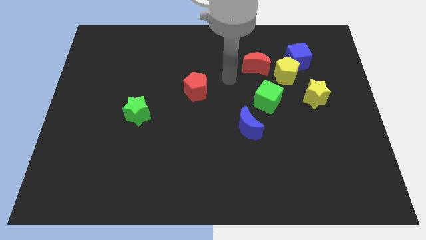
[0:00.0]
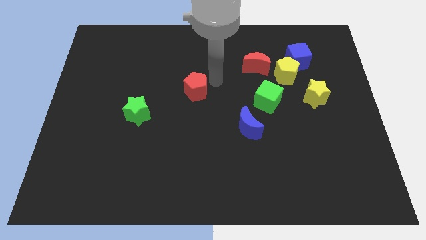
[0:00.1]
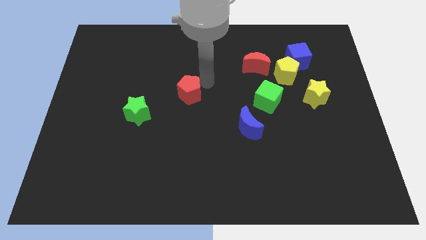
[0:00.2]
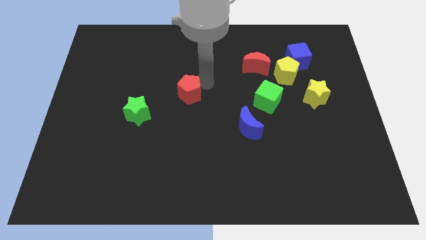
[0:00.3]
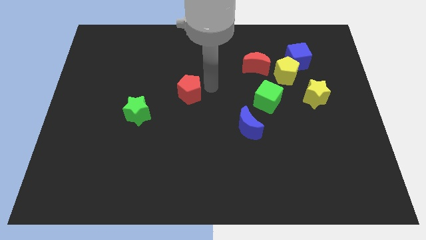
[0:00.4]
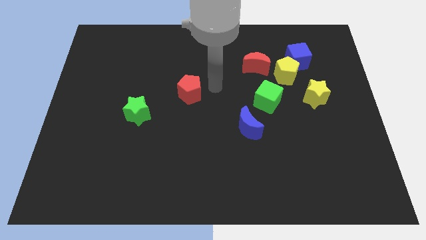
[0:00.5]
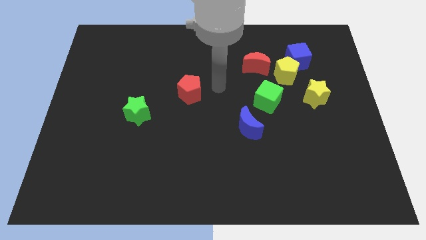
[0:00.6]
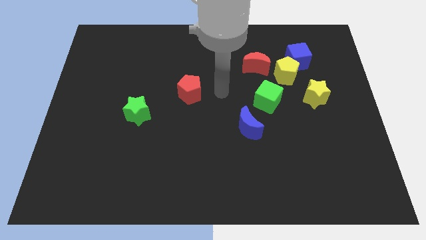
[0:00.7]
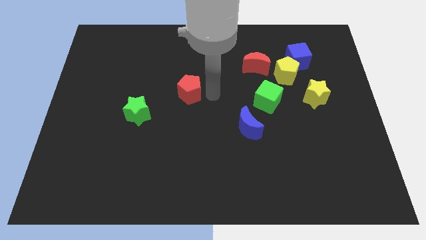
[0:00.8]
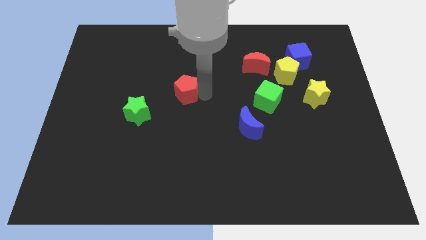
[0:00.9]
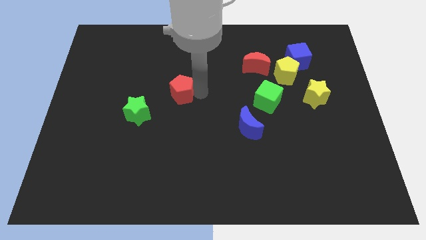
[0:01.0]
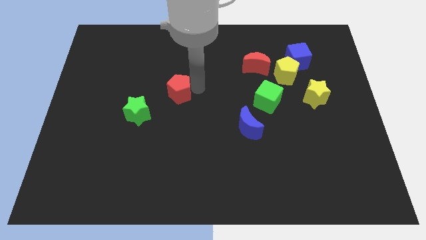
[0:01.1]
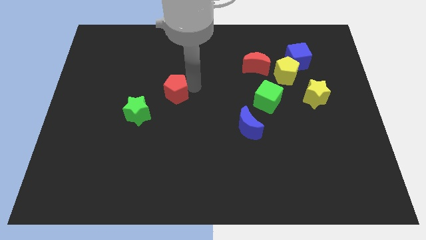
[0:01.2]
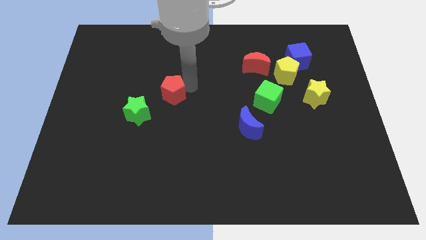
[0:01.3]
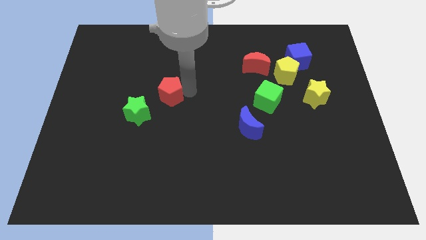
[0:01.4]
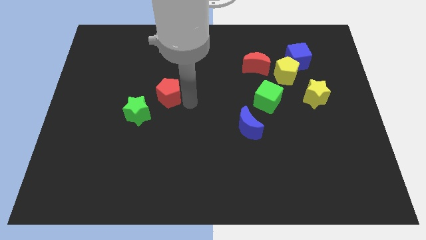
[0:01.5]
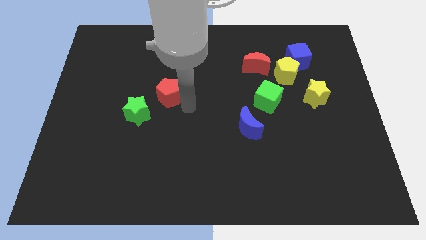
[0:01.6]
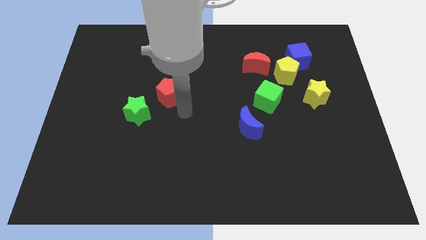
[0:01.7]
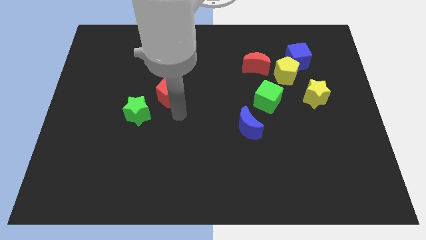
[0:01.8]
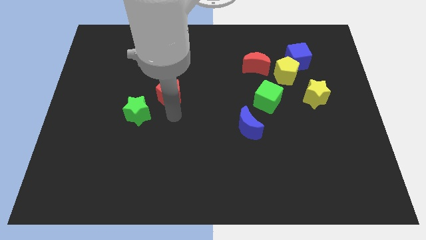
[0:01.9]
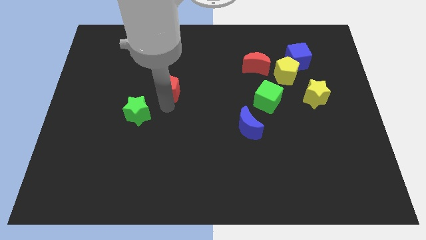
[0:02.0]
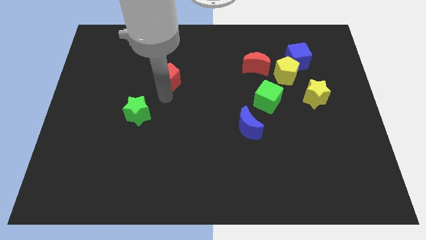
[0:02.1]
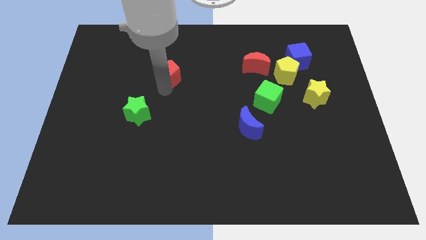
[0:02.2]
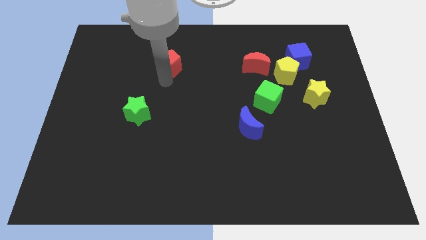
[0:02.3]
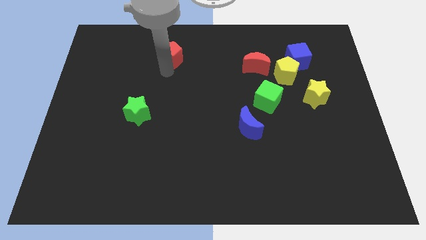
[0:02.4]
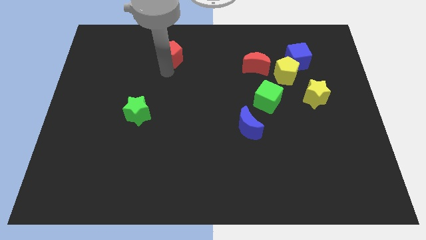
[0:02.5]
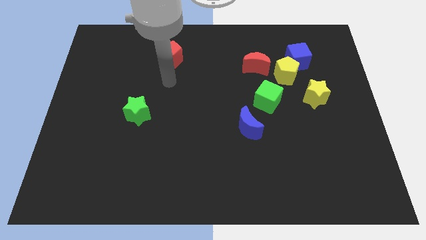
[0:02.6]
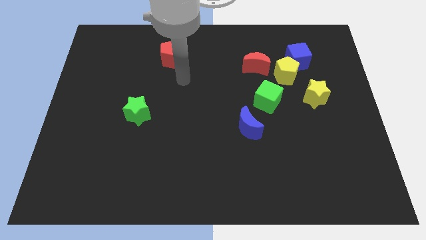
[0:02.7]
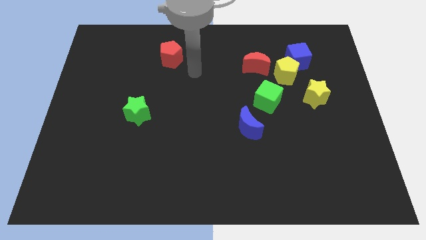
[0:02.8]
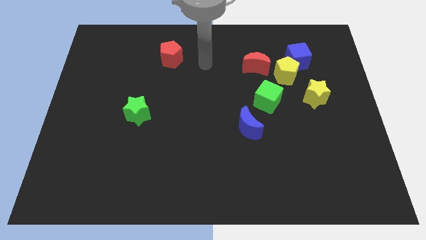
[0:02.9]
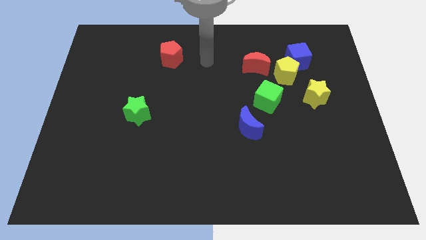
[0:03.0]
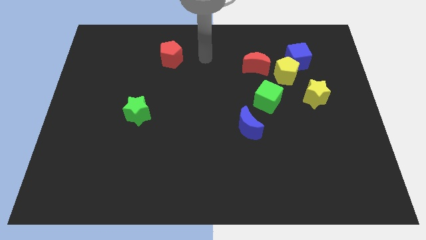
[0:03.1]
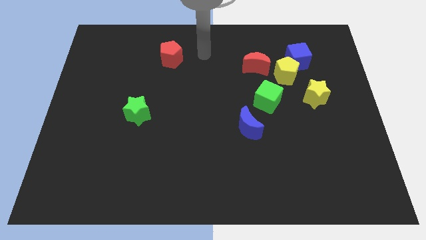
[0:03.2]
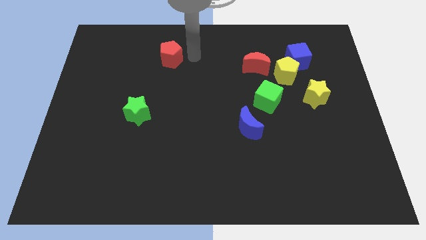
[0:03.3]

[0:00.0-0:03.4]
move the red pentagon to the top center

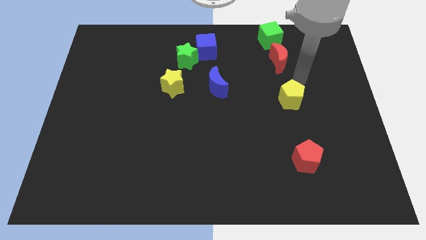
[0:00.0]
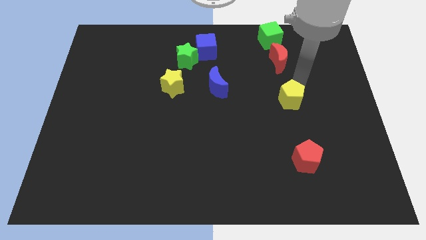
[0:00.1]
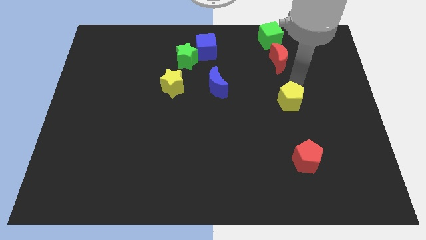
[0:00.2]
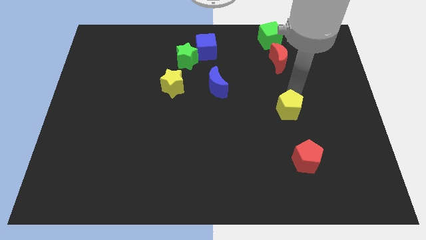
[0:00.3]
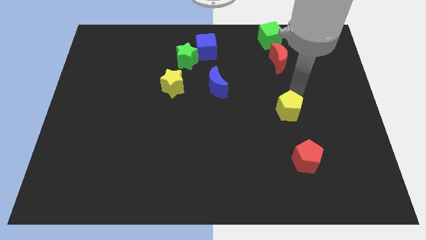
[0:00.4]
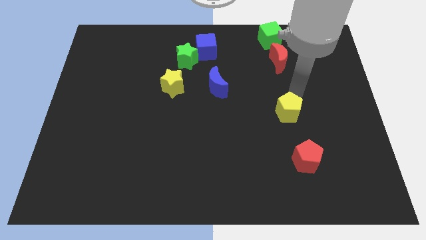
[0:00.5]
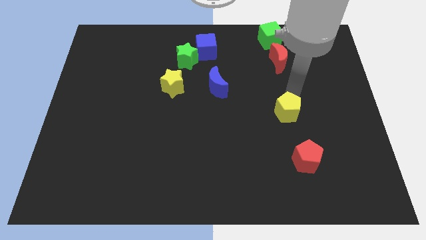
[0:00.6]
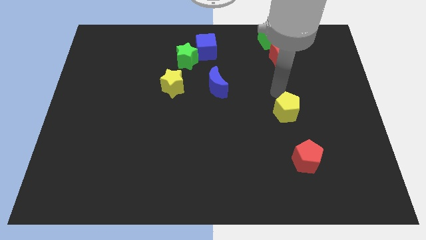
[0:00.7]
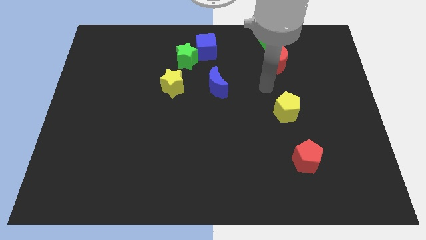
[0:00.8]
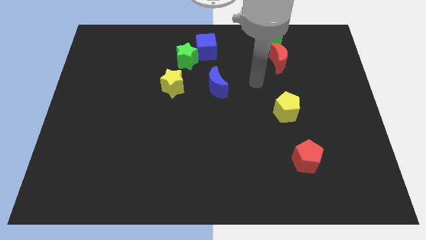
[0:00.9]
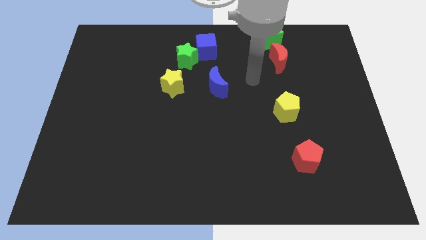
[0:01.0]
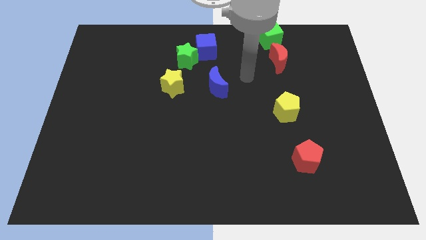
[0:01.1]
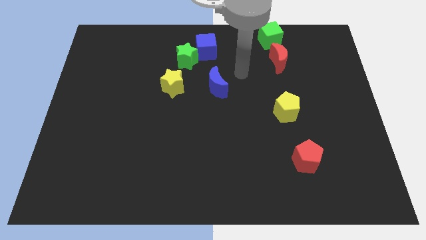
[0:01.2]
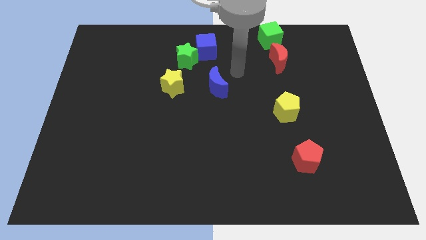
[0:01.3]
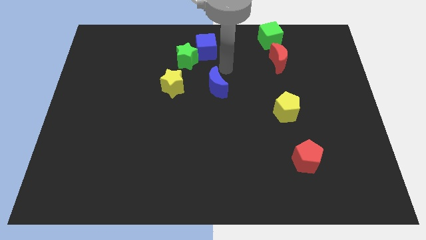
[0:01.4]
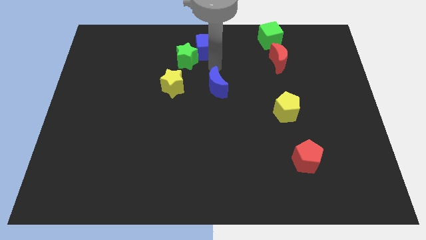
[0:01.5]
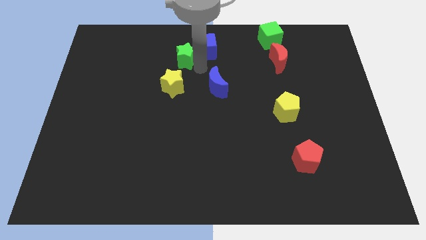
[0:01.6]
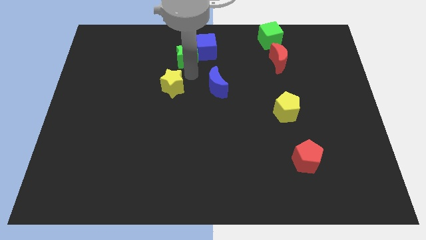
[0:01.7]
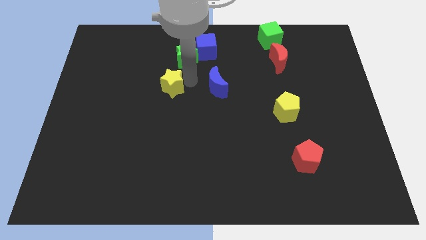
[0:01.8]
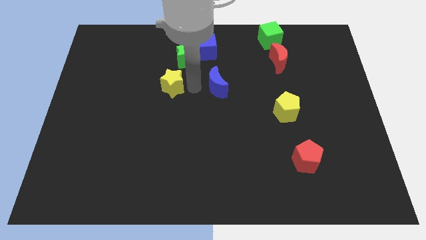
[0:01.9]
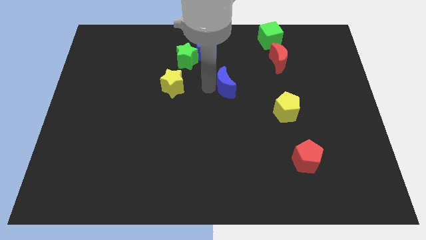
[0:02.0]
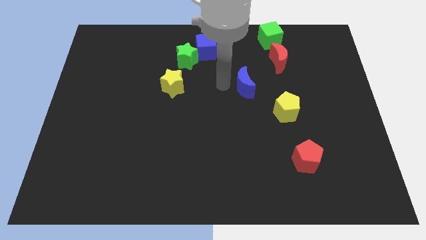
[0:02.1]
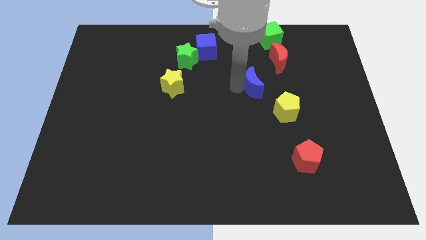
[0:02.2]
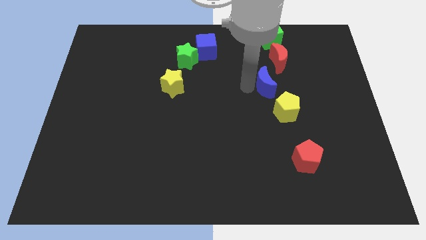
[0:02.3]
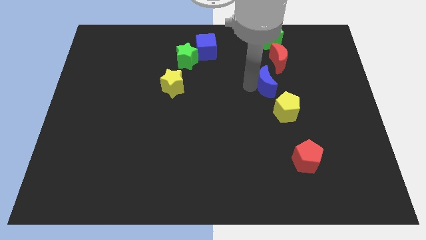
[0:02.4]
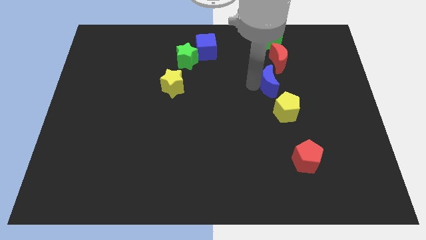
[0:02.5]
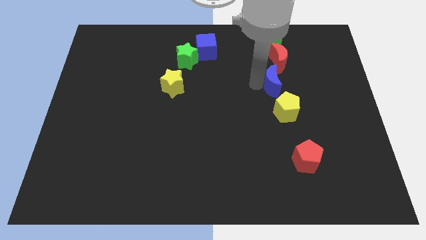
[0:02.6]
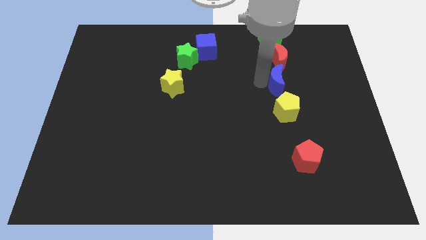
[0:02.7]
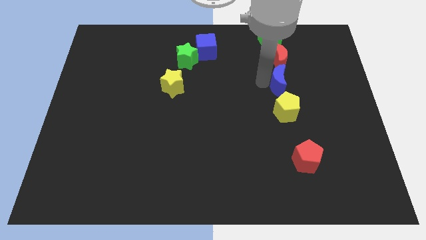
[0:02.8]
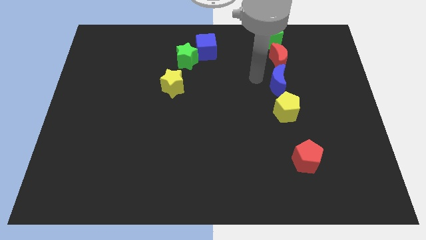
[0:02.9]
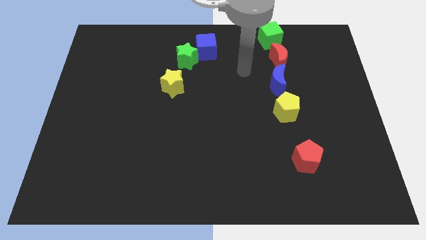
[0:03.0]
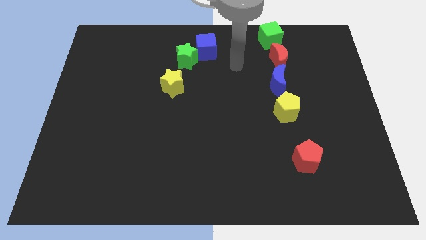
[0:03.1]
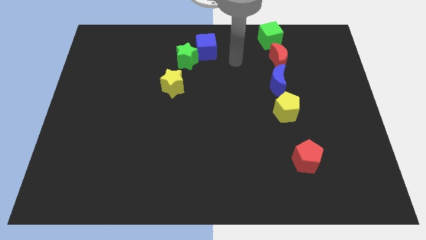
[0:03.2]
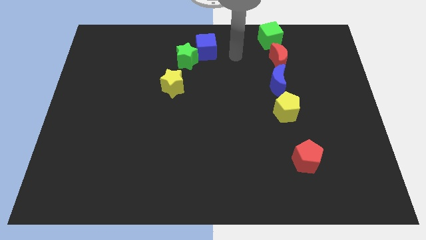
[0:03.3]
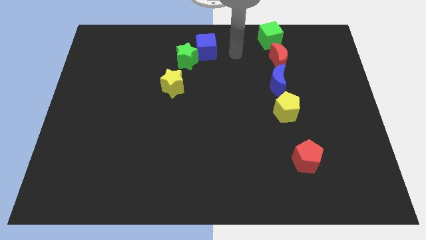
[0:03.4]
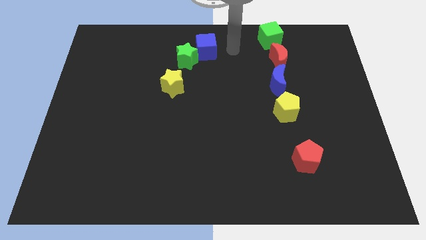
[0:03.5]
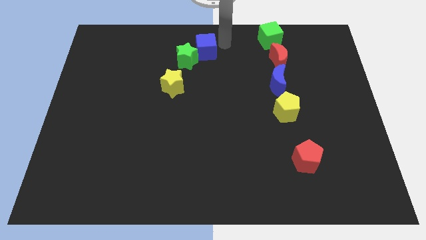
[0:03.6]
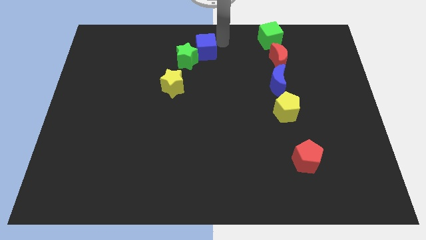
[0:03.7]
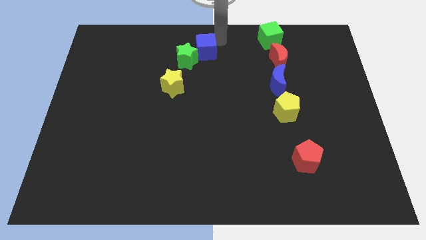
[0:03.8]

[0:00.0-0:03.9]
move the blue moon to the down of the red moon

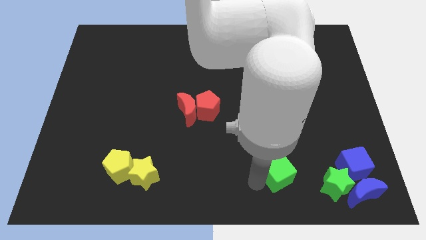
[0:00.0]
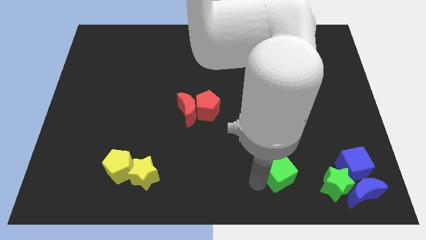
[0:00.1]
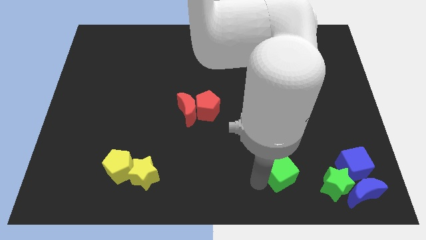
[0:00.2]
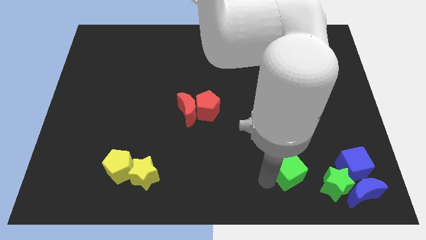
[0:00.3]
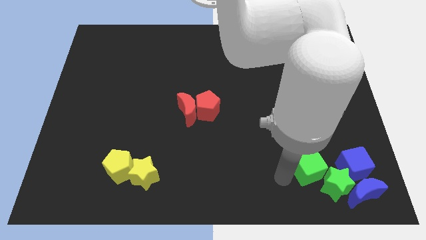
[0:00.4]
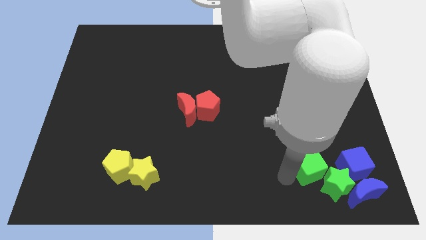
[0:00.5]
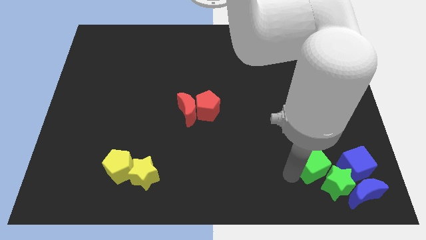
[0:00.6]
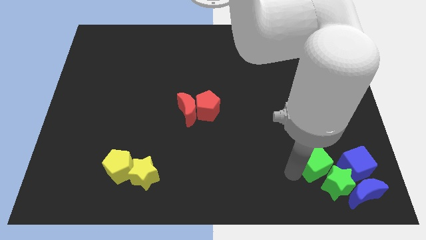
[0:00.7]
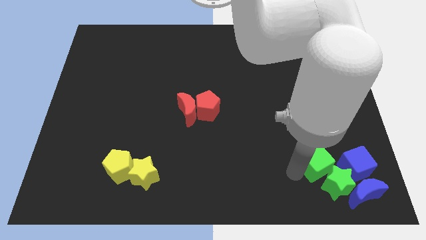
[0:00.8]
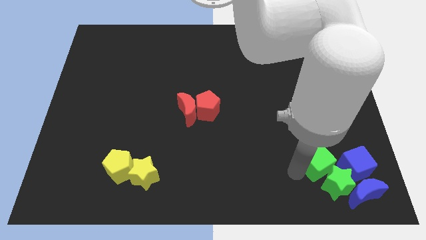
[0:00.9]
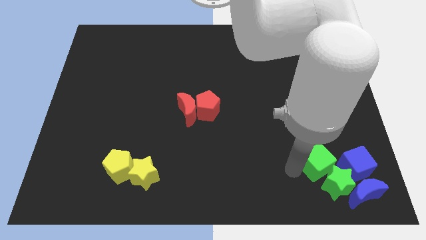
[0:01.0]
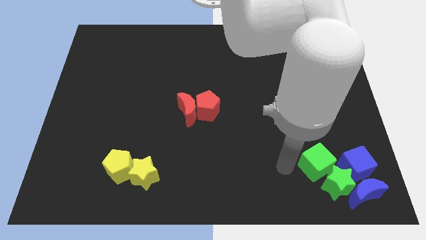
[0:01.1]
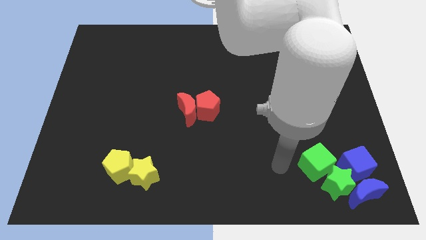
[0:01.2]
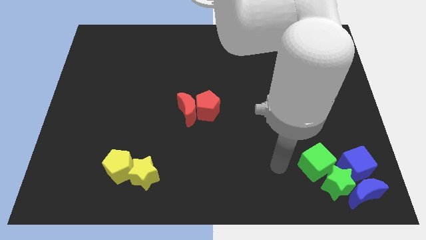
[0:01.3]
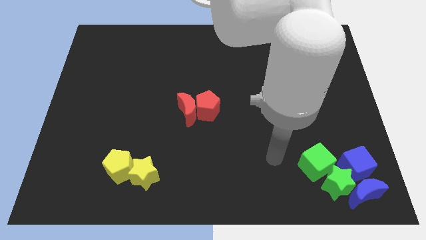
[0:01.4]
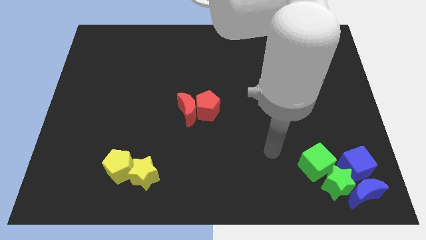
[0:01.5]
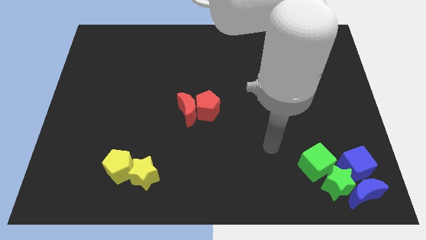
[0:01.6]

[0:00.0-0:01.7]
push the green cube into the group of blocks
